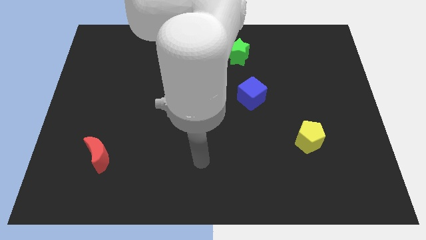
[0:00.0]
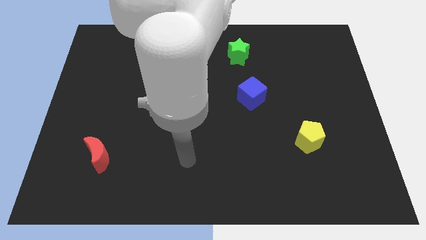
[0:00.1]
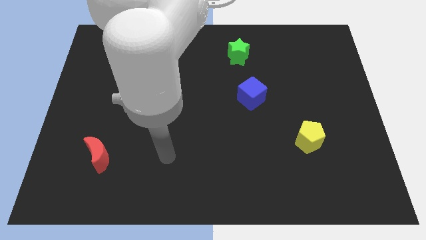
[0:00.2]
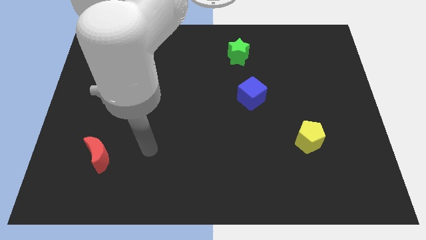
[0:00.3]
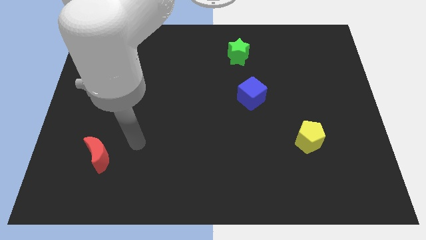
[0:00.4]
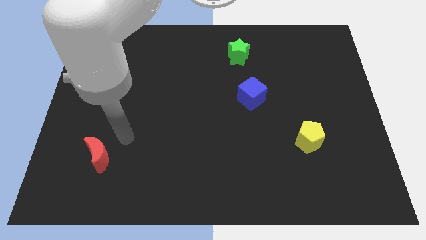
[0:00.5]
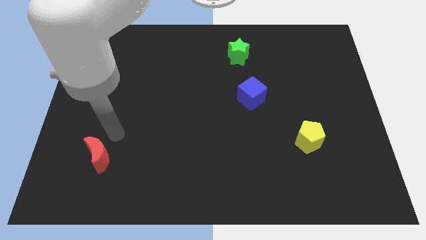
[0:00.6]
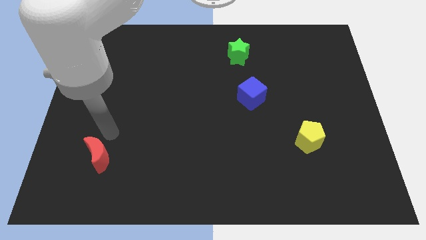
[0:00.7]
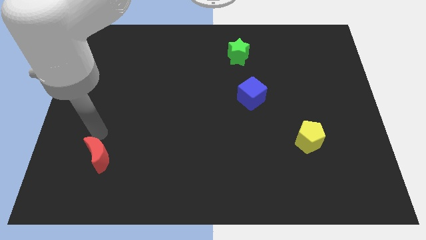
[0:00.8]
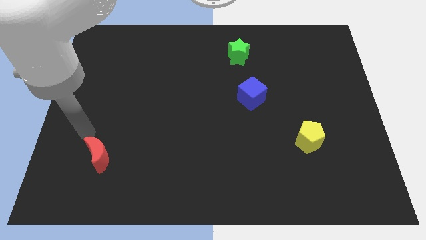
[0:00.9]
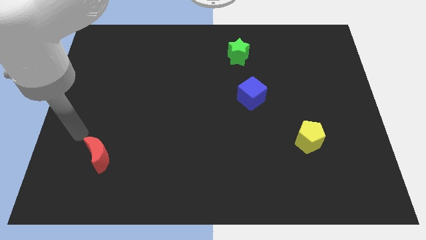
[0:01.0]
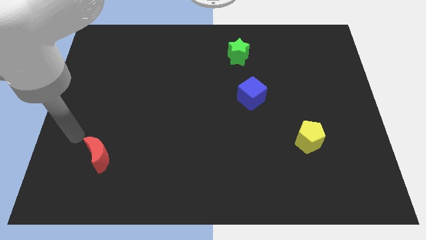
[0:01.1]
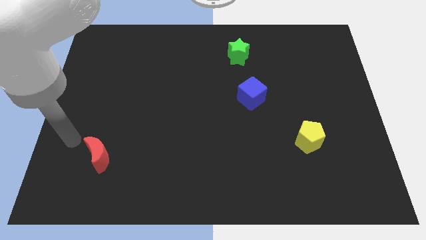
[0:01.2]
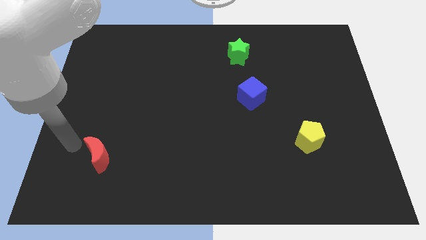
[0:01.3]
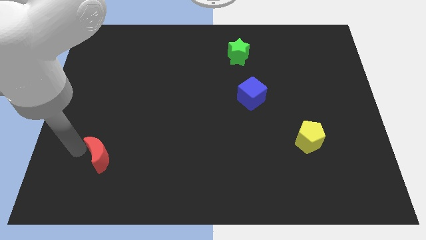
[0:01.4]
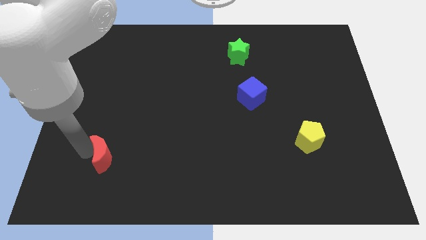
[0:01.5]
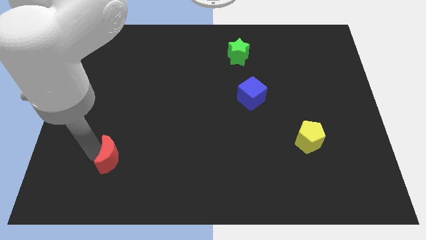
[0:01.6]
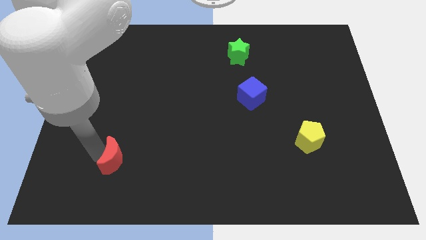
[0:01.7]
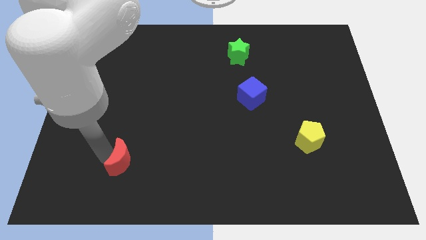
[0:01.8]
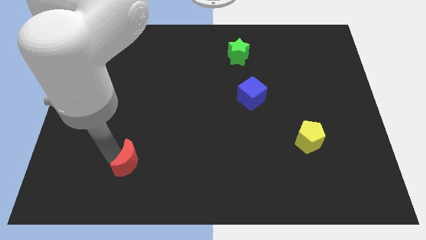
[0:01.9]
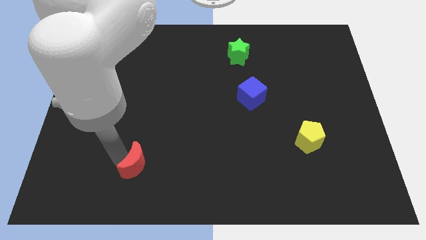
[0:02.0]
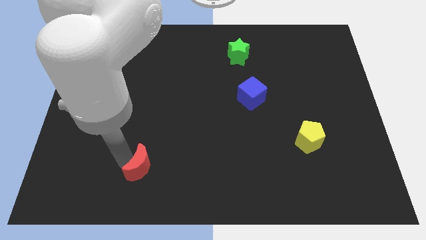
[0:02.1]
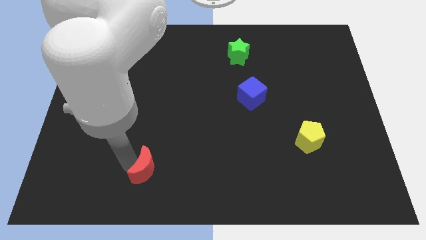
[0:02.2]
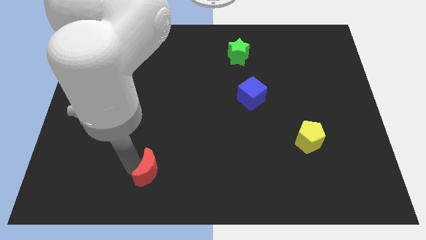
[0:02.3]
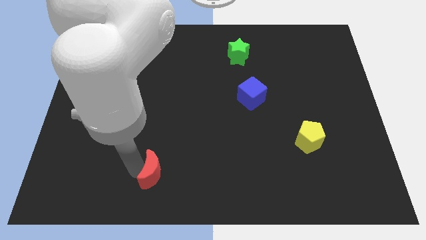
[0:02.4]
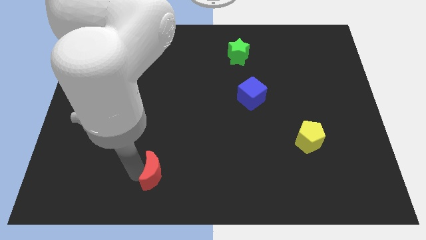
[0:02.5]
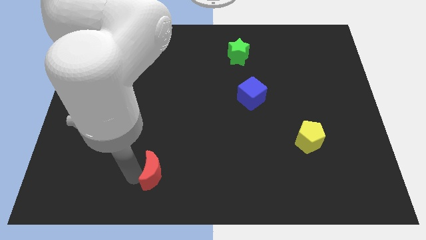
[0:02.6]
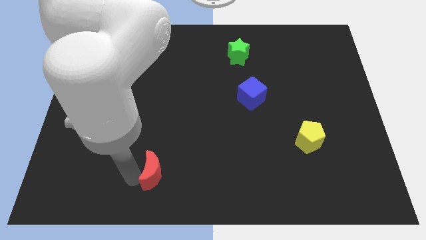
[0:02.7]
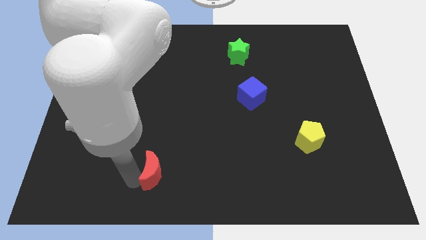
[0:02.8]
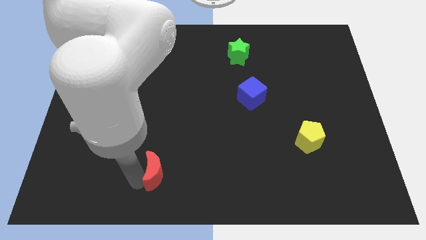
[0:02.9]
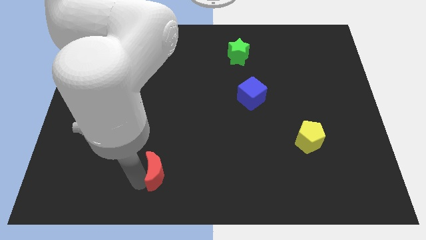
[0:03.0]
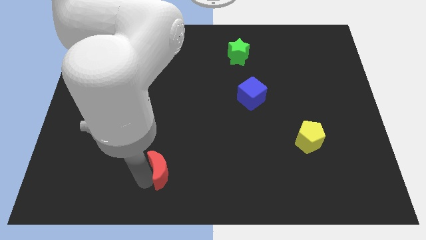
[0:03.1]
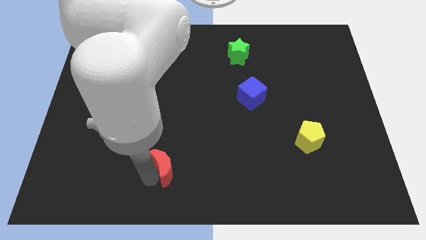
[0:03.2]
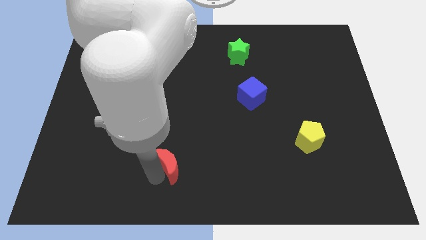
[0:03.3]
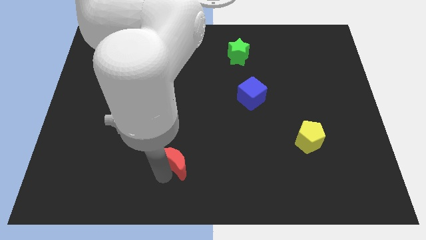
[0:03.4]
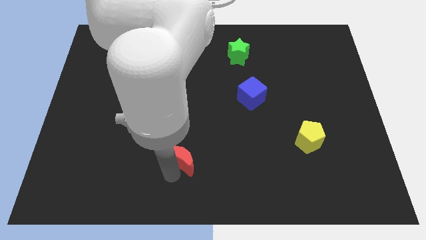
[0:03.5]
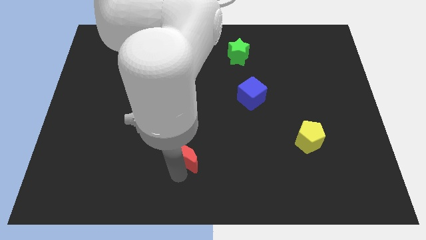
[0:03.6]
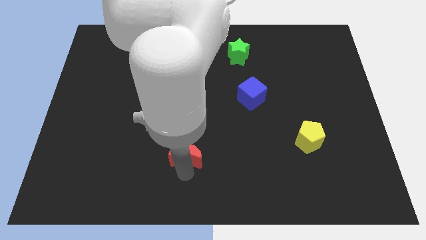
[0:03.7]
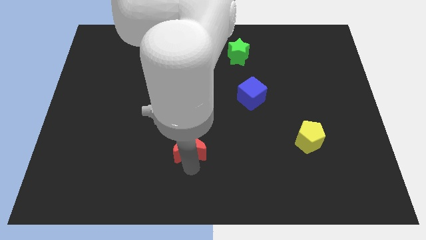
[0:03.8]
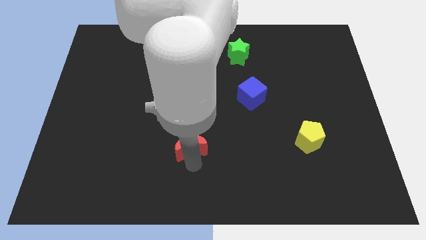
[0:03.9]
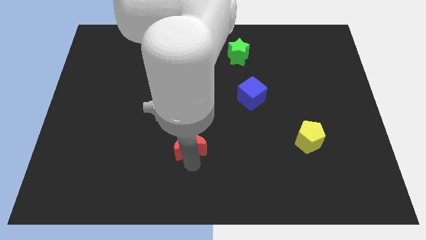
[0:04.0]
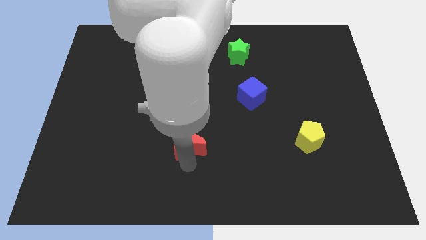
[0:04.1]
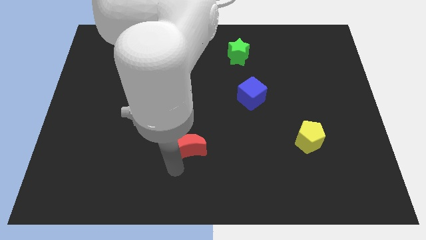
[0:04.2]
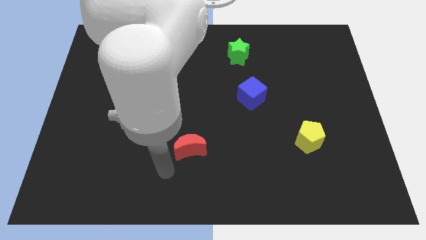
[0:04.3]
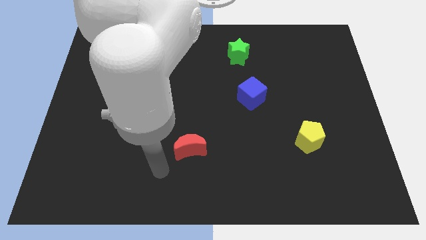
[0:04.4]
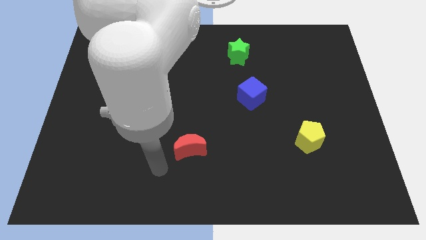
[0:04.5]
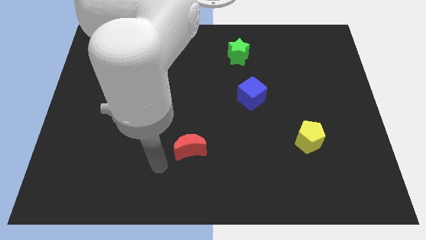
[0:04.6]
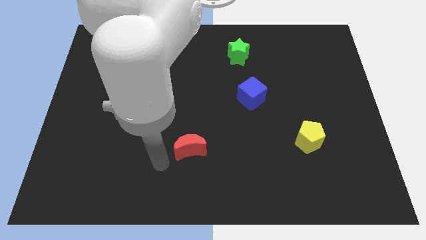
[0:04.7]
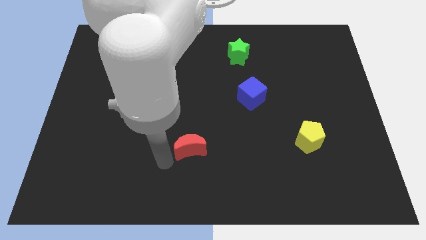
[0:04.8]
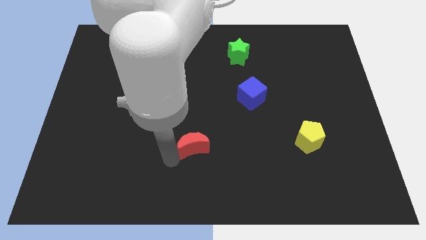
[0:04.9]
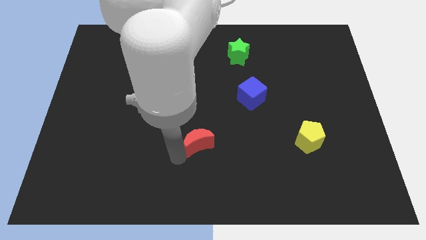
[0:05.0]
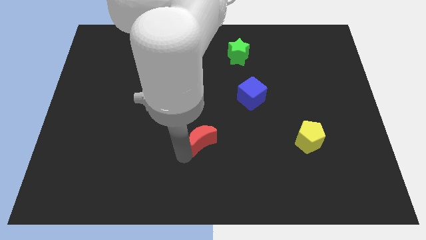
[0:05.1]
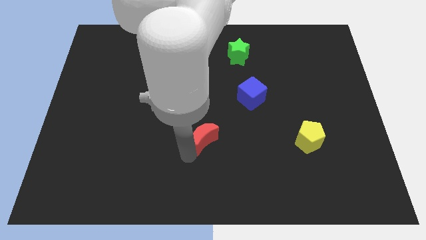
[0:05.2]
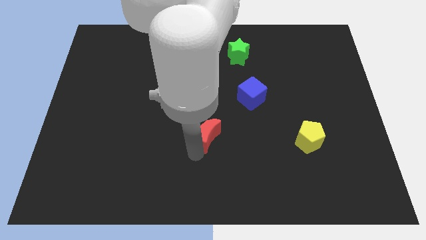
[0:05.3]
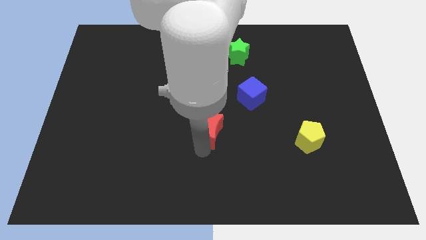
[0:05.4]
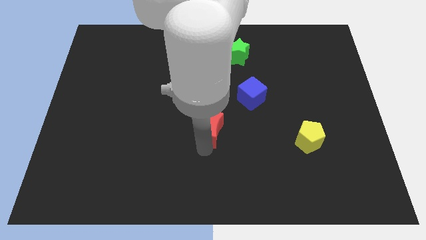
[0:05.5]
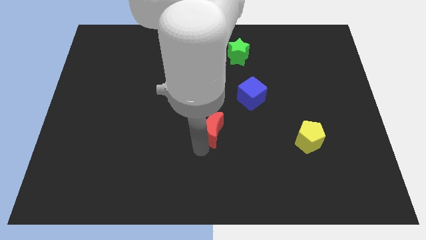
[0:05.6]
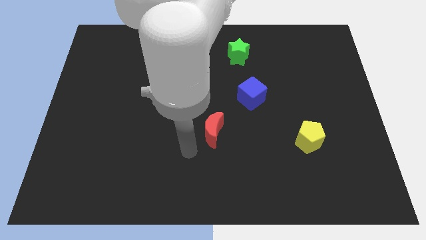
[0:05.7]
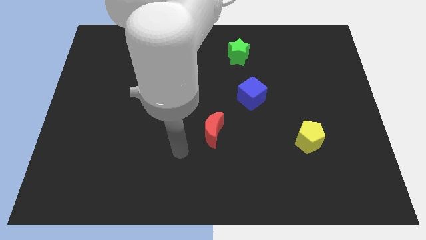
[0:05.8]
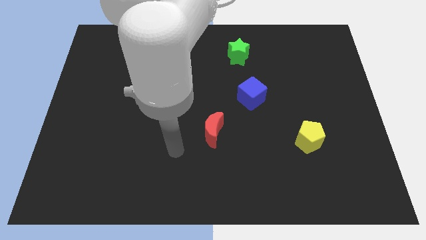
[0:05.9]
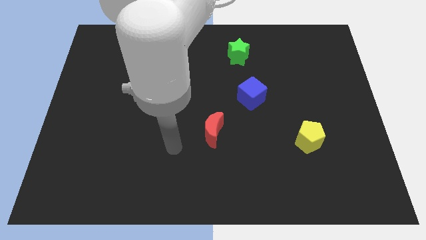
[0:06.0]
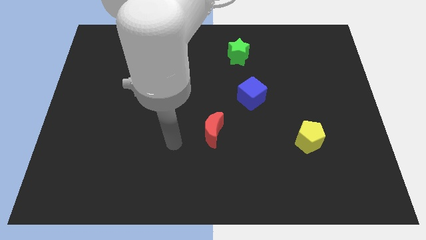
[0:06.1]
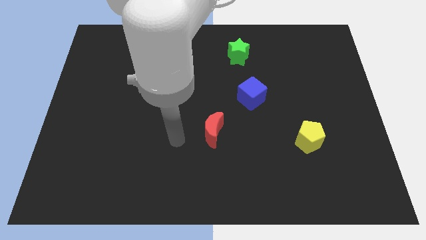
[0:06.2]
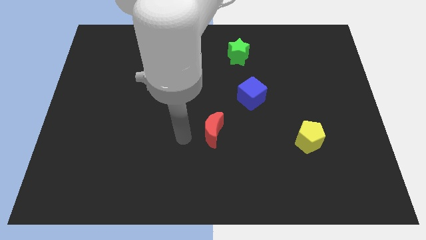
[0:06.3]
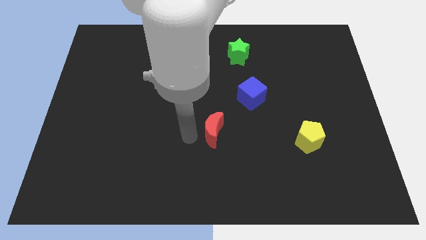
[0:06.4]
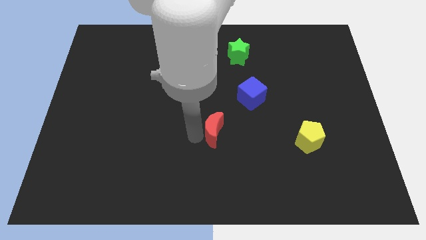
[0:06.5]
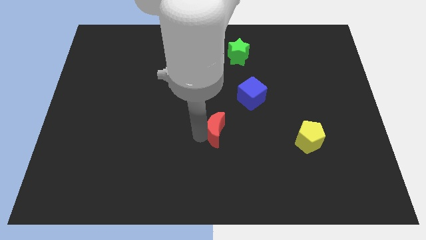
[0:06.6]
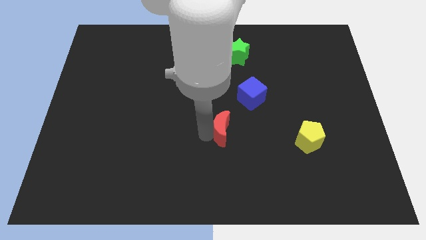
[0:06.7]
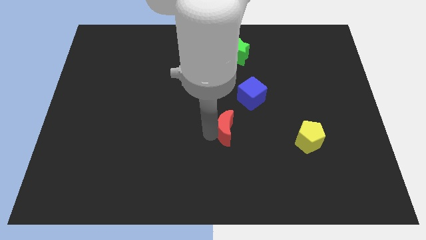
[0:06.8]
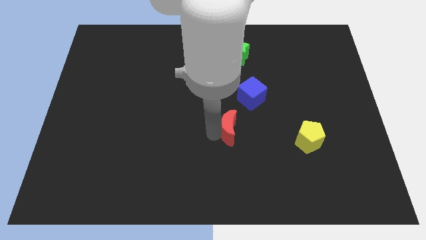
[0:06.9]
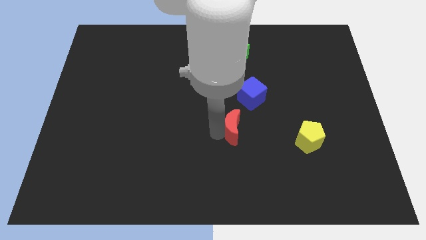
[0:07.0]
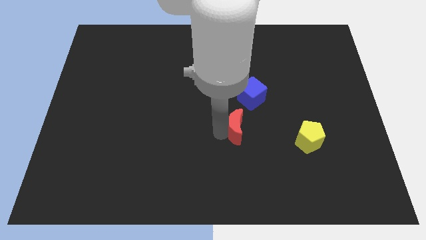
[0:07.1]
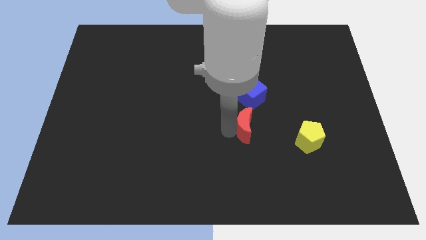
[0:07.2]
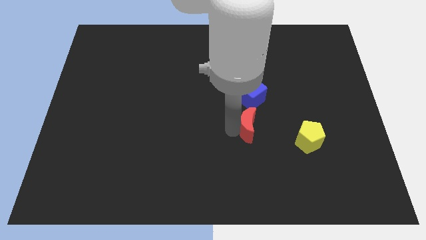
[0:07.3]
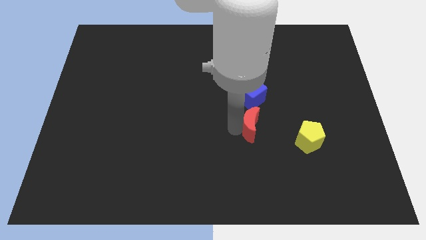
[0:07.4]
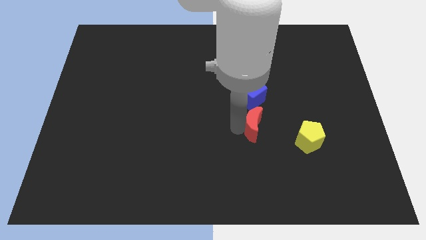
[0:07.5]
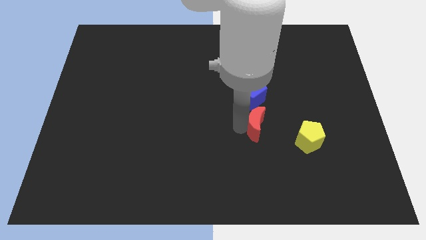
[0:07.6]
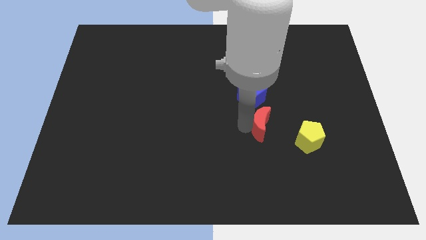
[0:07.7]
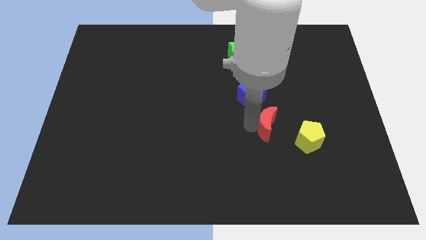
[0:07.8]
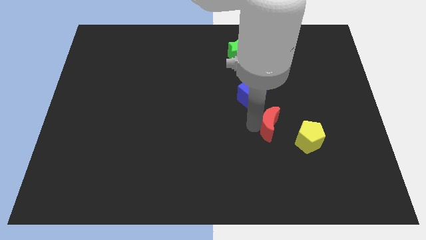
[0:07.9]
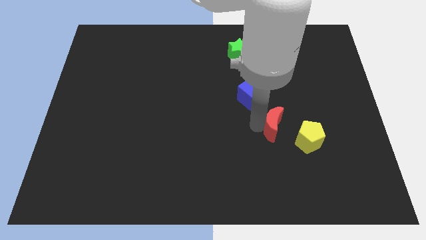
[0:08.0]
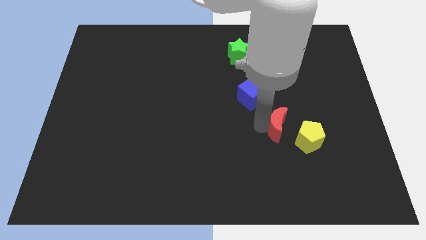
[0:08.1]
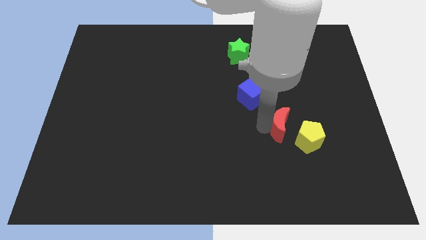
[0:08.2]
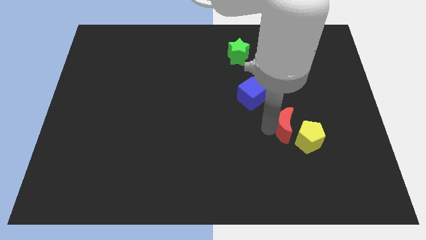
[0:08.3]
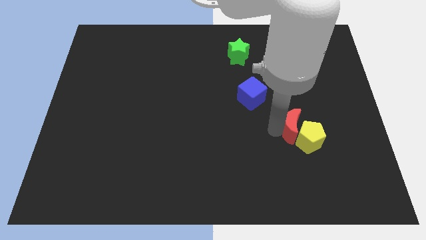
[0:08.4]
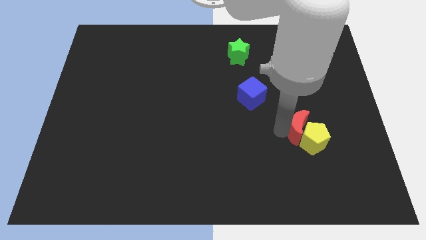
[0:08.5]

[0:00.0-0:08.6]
move the red moon to the yellow block
